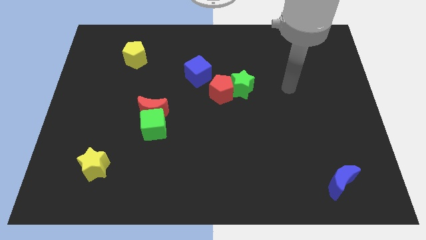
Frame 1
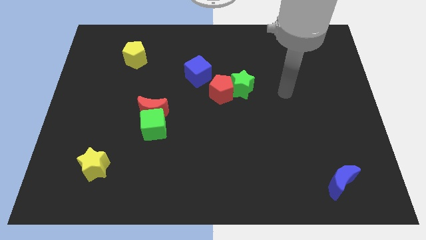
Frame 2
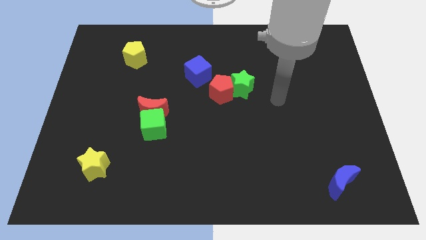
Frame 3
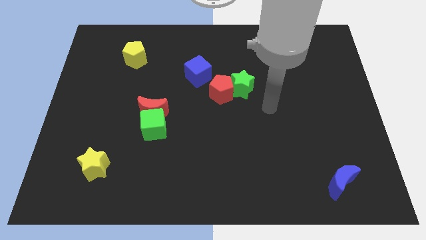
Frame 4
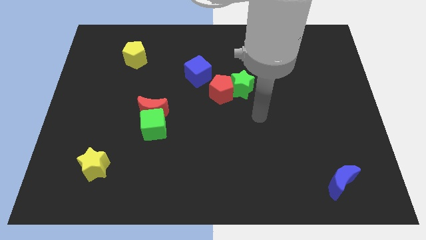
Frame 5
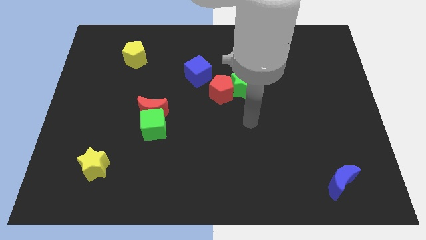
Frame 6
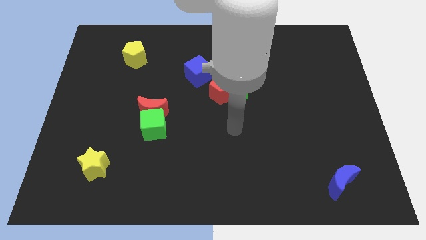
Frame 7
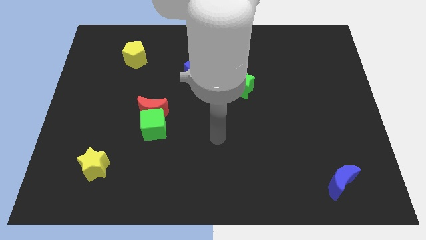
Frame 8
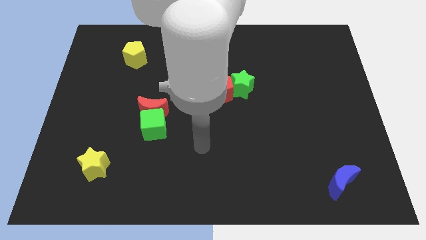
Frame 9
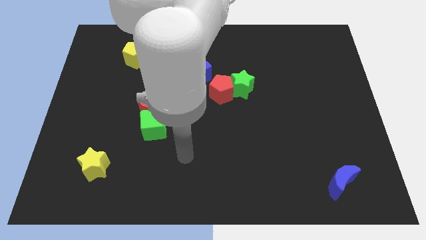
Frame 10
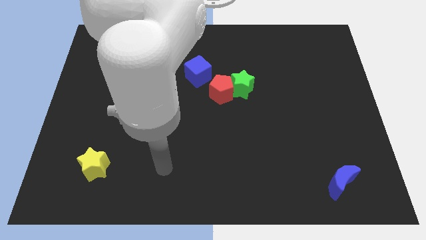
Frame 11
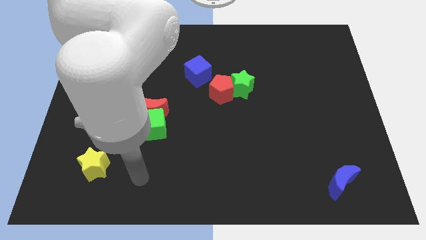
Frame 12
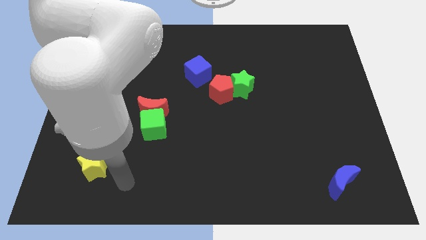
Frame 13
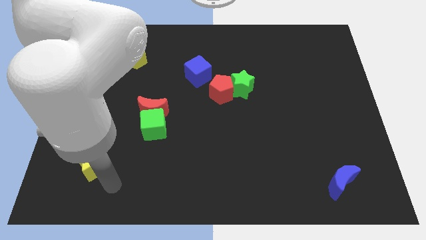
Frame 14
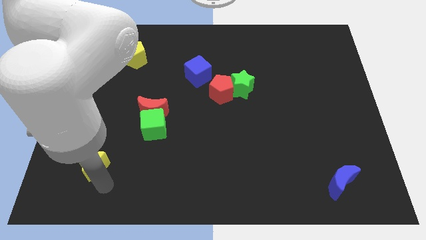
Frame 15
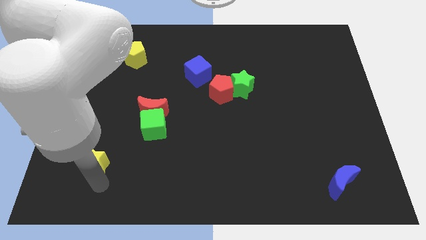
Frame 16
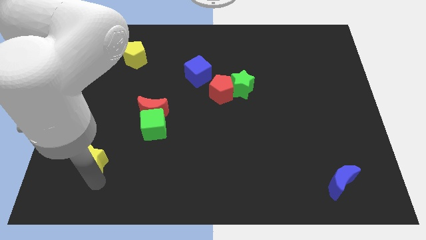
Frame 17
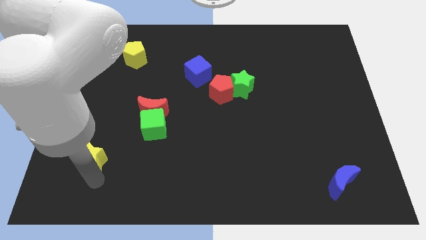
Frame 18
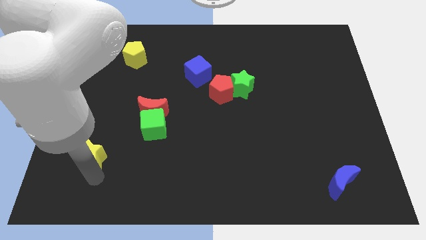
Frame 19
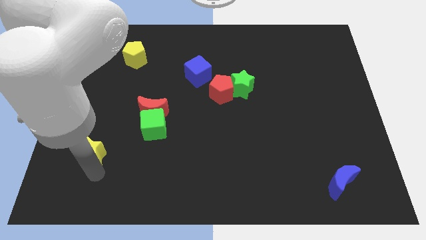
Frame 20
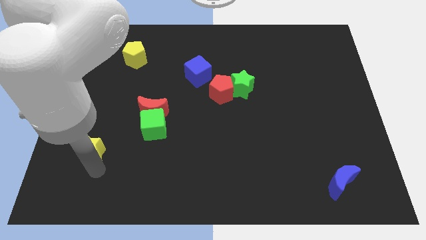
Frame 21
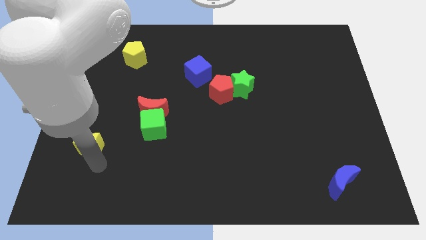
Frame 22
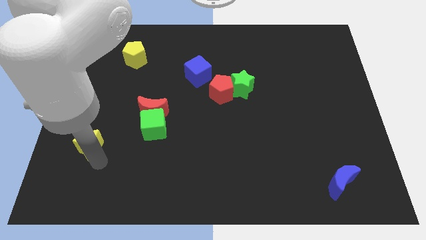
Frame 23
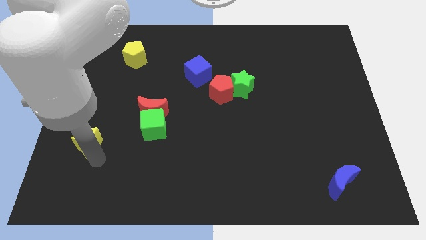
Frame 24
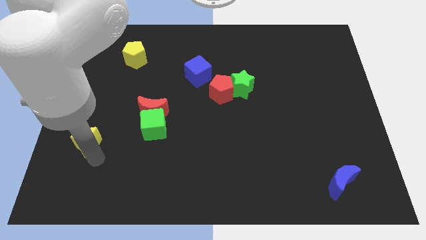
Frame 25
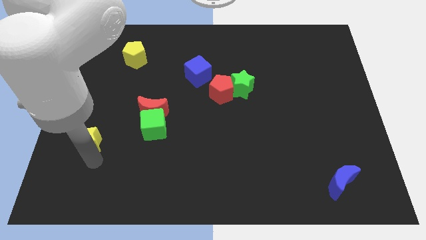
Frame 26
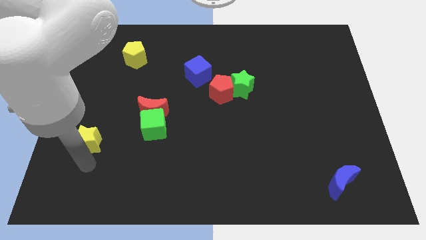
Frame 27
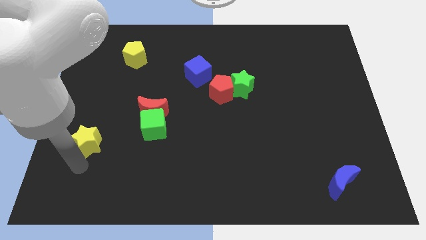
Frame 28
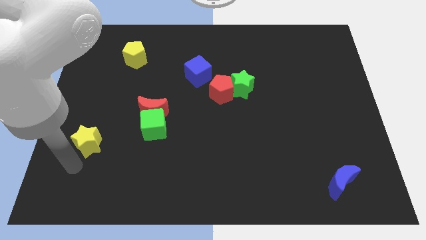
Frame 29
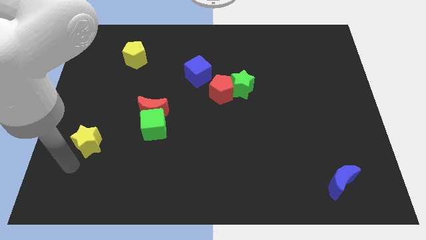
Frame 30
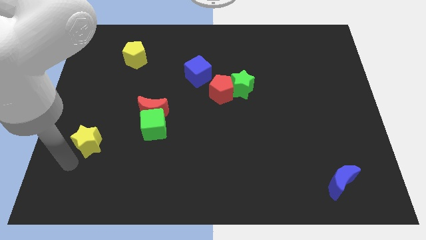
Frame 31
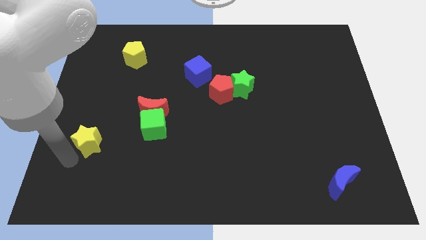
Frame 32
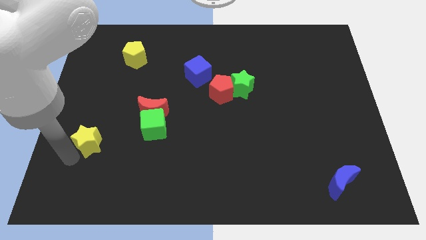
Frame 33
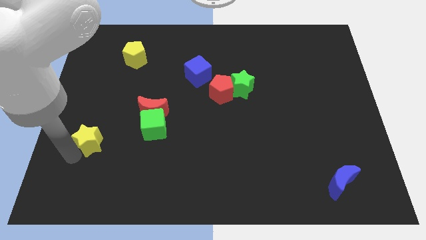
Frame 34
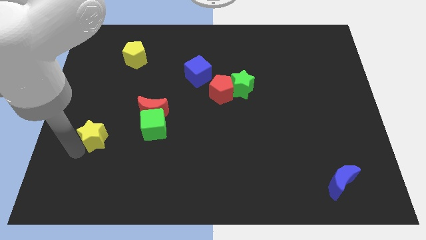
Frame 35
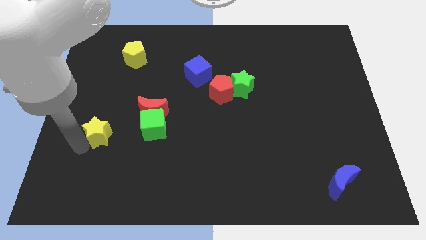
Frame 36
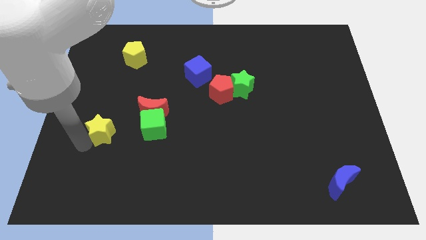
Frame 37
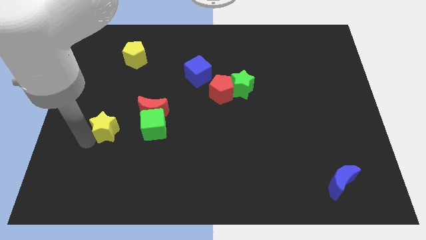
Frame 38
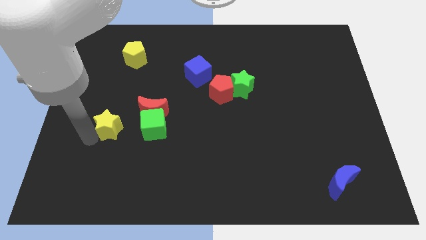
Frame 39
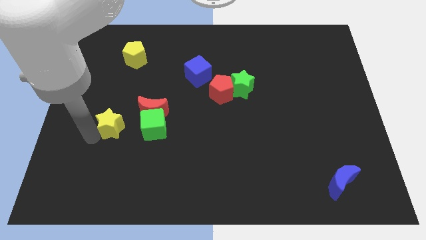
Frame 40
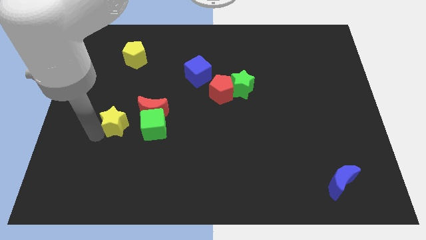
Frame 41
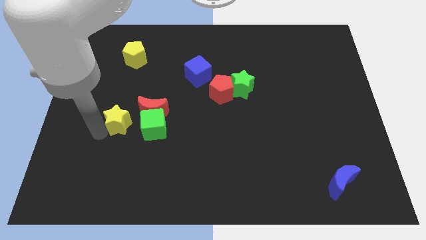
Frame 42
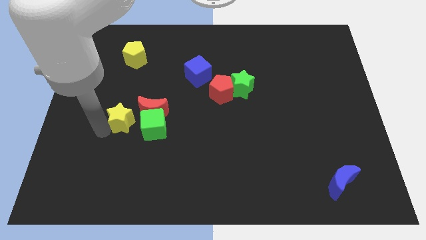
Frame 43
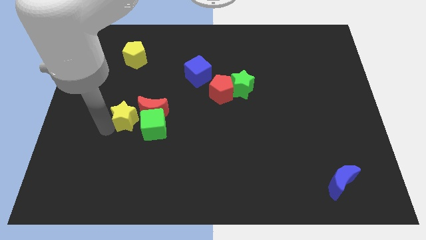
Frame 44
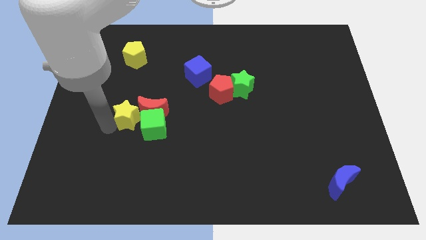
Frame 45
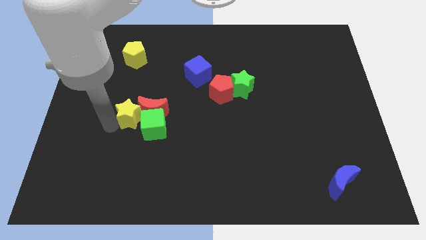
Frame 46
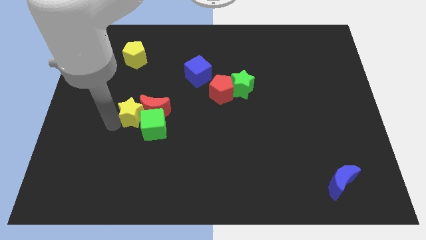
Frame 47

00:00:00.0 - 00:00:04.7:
slide the yellow star close to the red moon

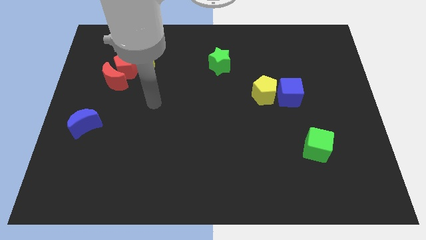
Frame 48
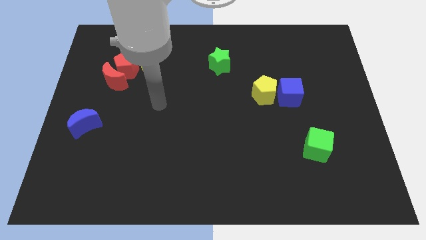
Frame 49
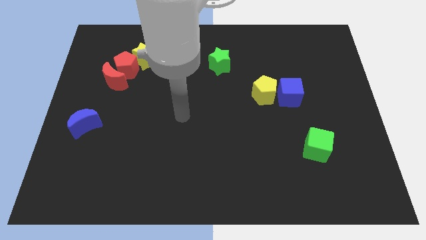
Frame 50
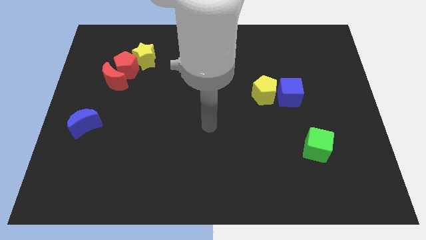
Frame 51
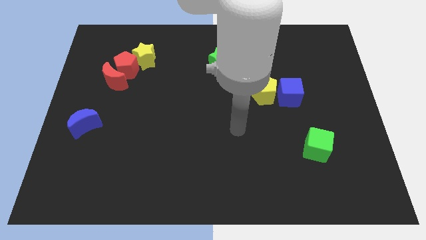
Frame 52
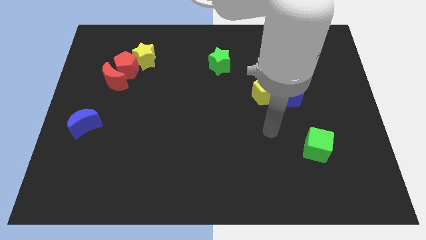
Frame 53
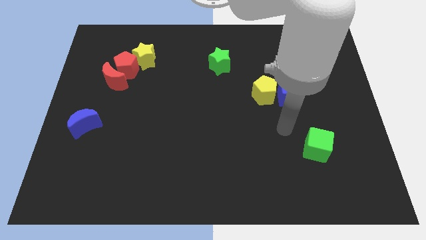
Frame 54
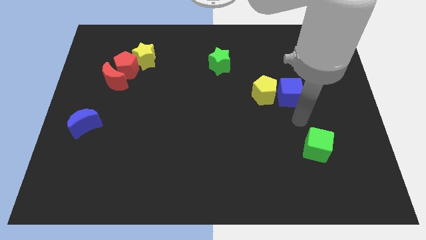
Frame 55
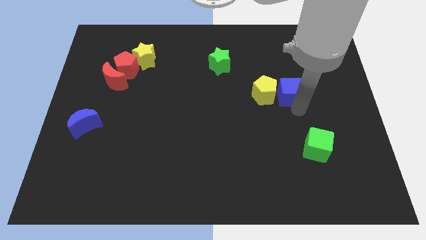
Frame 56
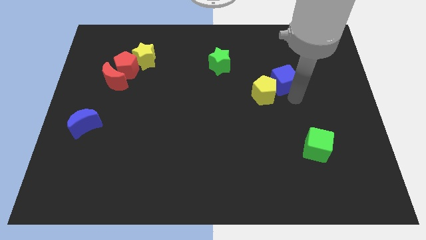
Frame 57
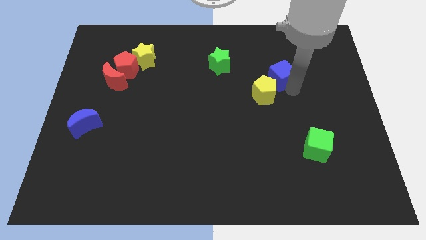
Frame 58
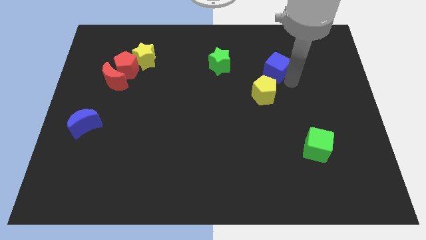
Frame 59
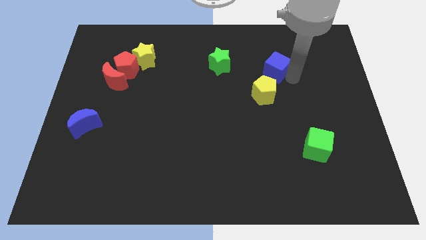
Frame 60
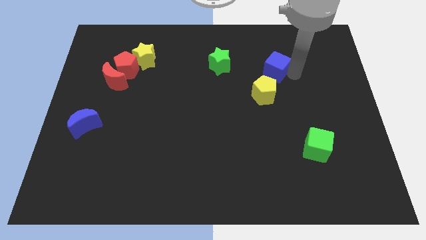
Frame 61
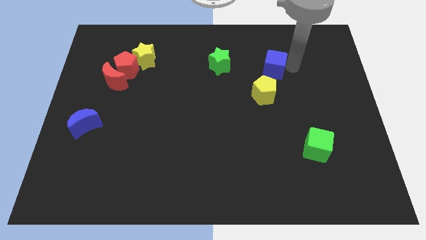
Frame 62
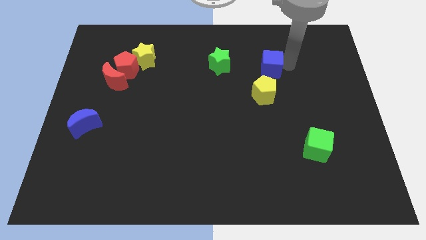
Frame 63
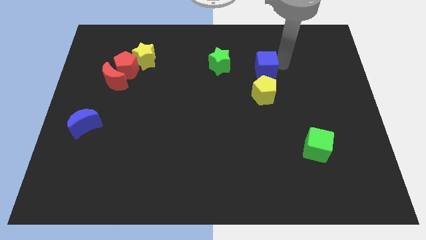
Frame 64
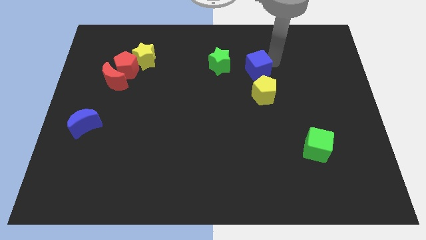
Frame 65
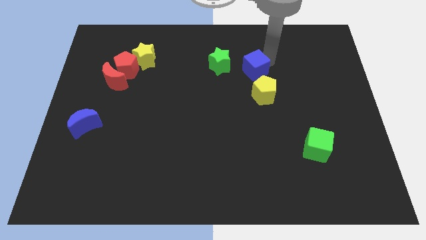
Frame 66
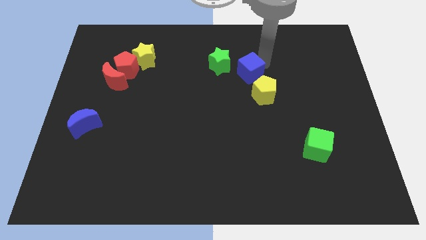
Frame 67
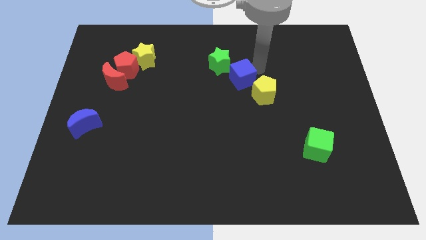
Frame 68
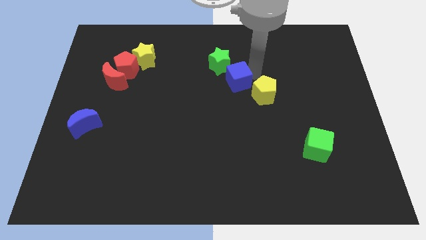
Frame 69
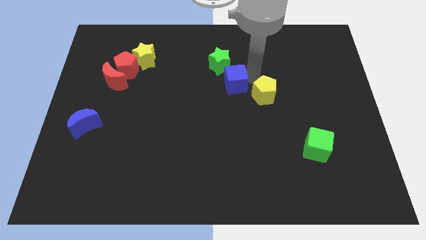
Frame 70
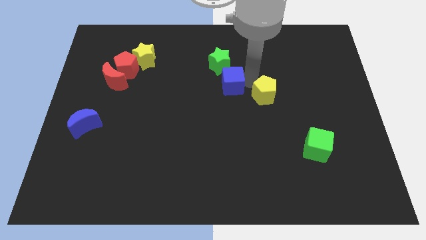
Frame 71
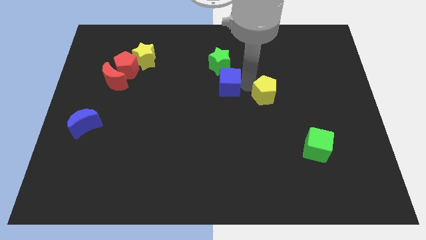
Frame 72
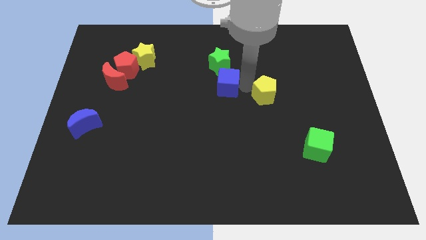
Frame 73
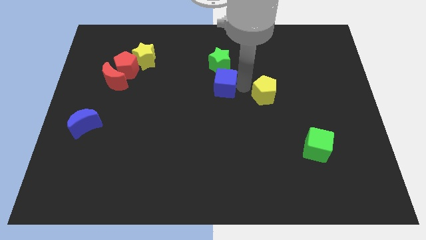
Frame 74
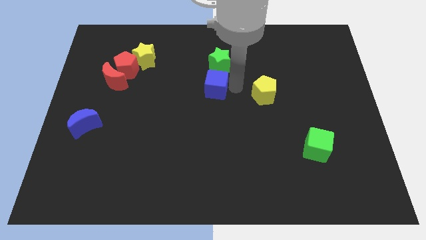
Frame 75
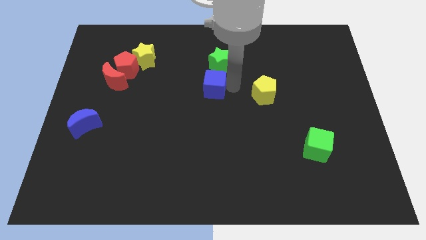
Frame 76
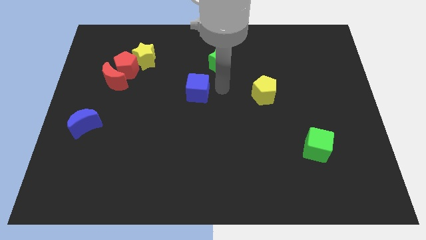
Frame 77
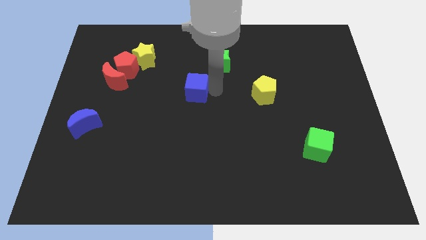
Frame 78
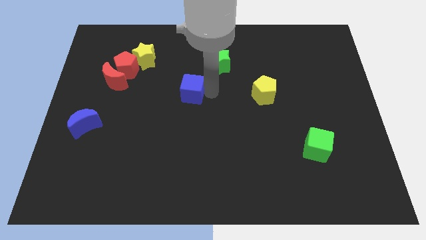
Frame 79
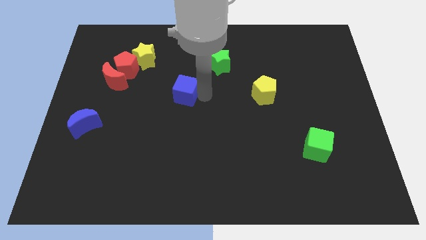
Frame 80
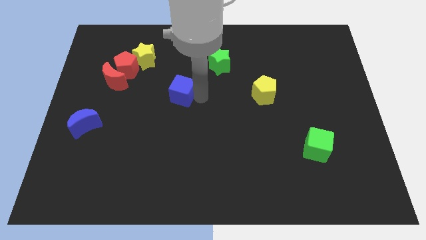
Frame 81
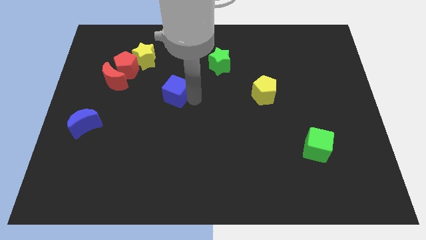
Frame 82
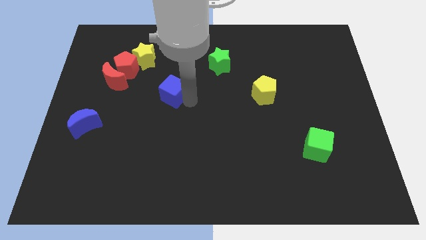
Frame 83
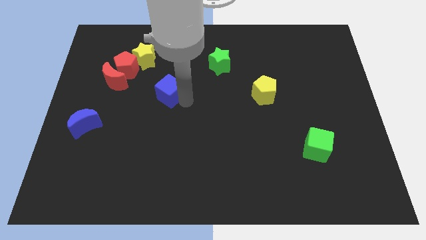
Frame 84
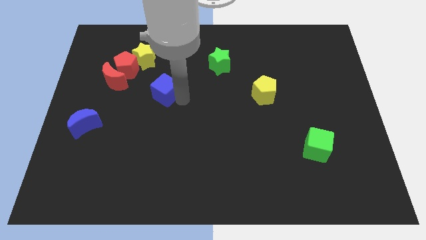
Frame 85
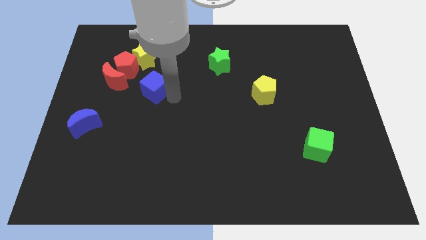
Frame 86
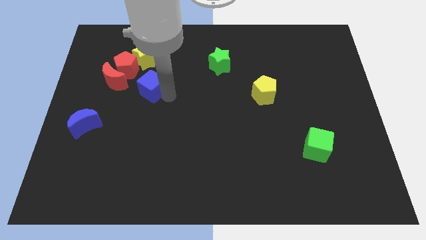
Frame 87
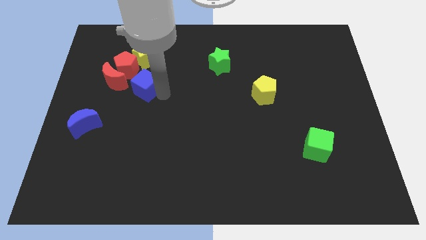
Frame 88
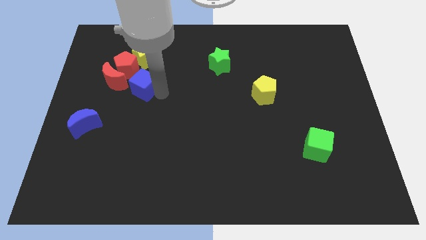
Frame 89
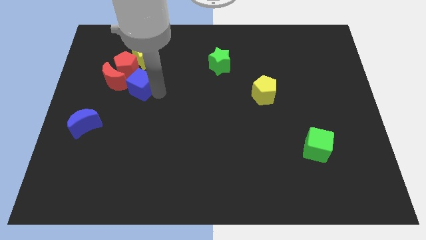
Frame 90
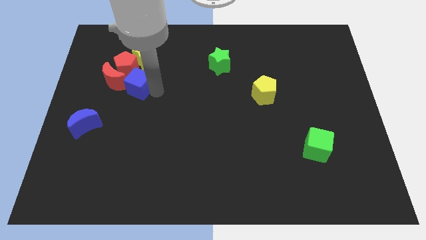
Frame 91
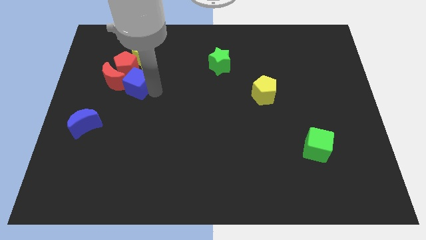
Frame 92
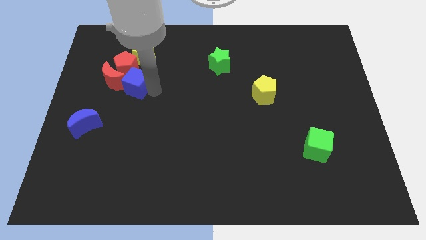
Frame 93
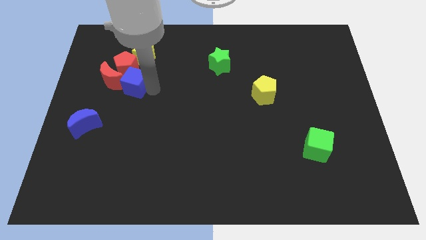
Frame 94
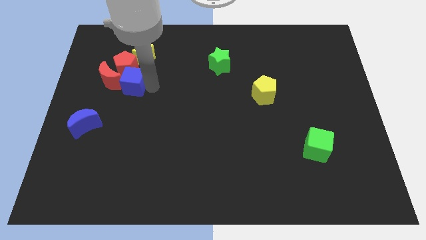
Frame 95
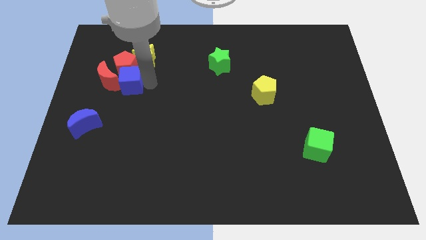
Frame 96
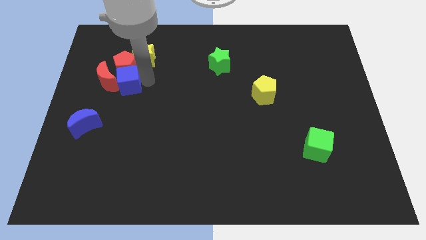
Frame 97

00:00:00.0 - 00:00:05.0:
push the blue cube close to the red pentagon
